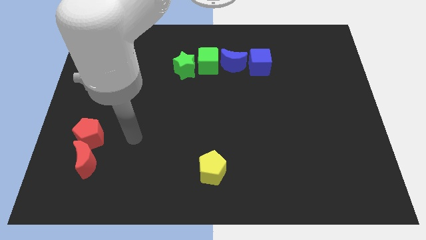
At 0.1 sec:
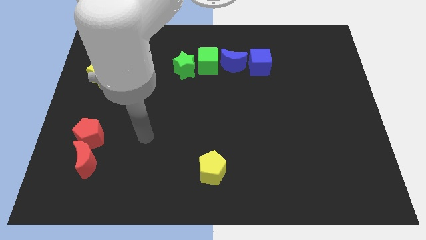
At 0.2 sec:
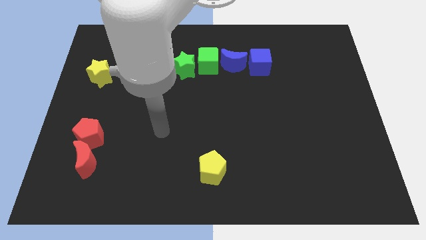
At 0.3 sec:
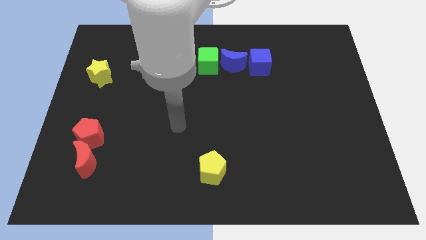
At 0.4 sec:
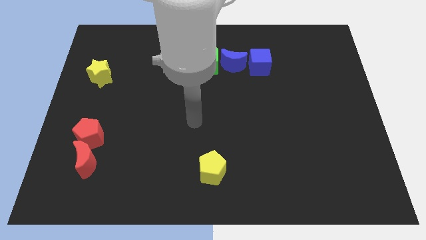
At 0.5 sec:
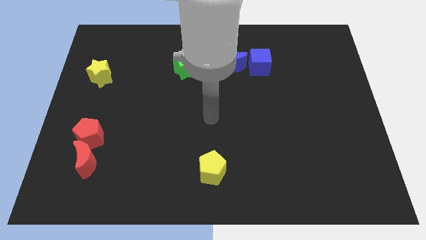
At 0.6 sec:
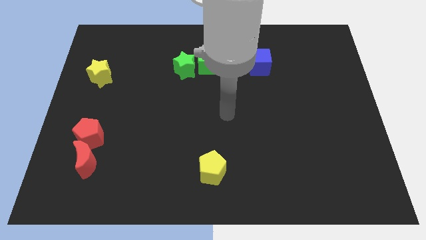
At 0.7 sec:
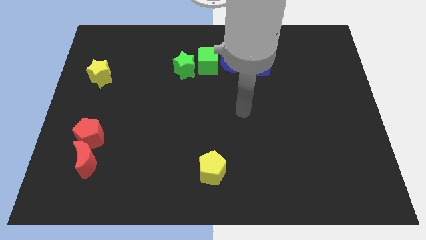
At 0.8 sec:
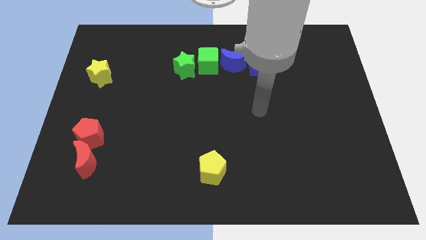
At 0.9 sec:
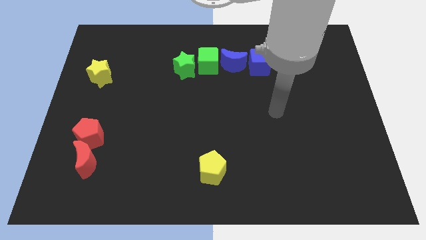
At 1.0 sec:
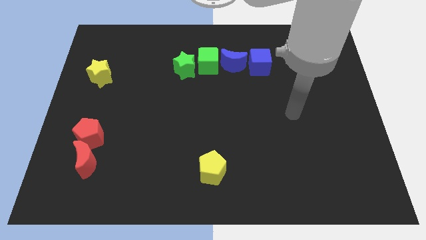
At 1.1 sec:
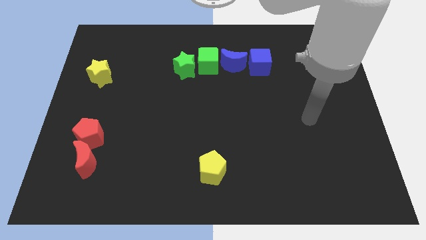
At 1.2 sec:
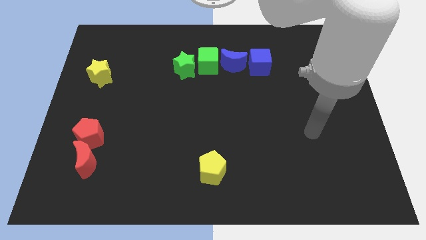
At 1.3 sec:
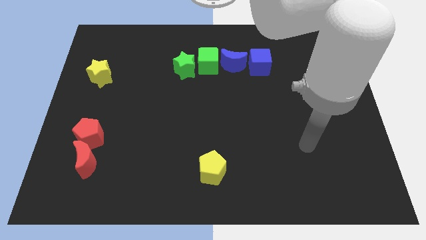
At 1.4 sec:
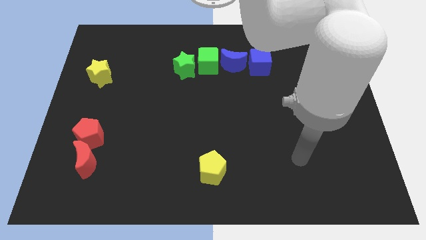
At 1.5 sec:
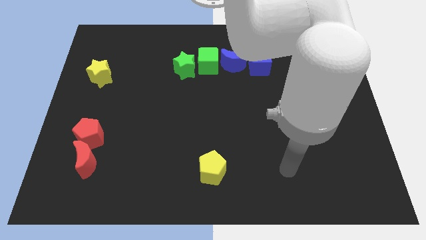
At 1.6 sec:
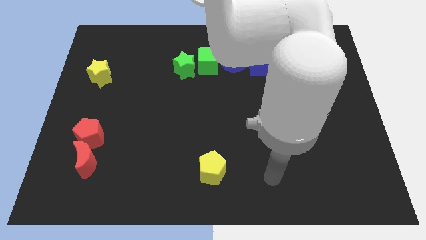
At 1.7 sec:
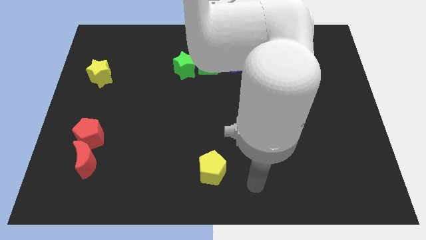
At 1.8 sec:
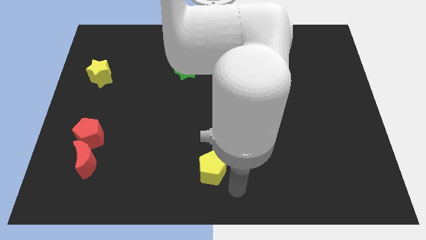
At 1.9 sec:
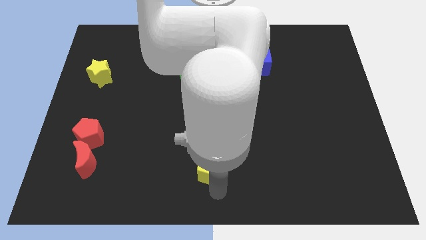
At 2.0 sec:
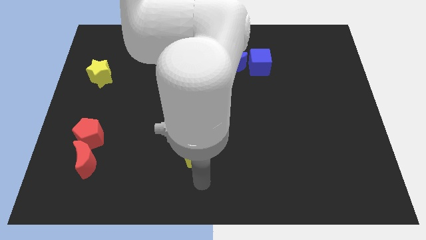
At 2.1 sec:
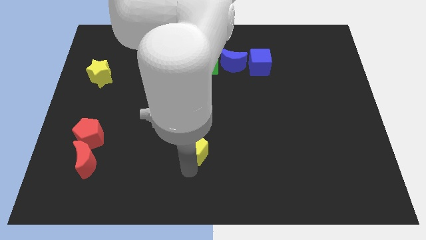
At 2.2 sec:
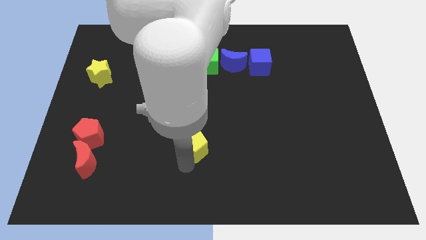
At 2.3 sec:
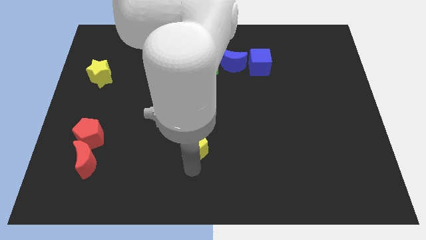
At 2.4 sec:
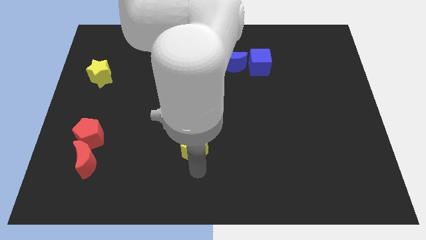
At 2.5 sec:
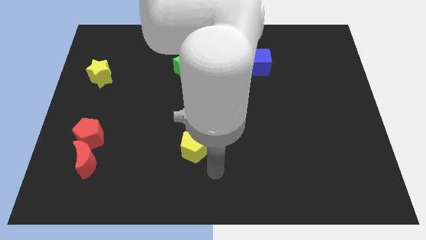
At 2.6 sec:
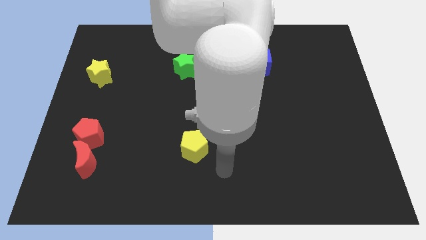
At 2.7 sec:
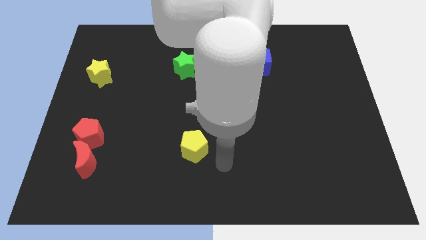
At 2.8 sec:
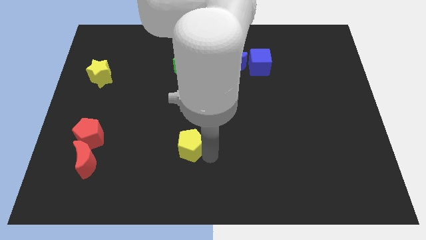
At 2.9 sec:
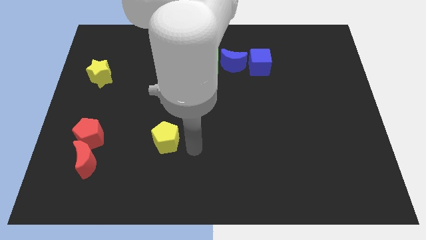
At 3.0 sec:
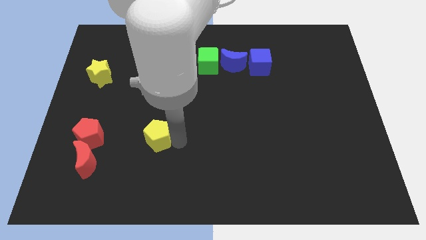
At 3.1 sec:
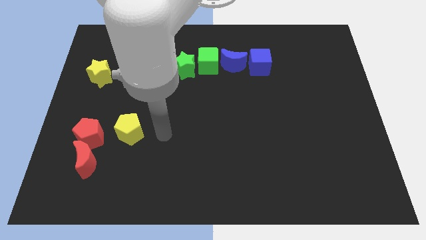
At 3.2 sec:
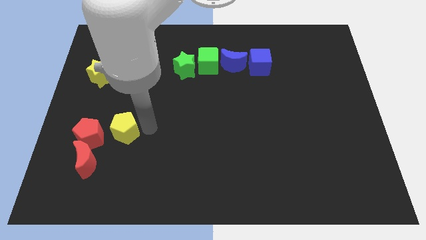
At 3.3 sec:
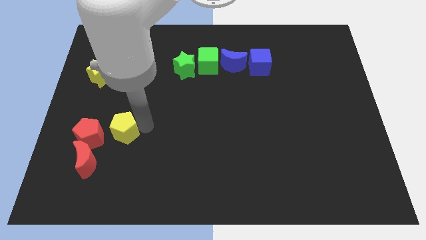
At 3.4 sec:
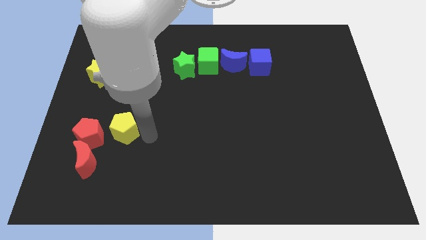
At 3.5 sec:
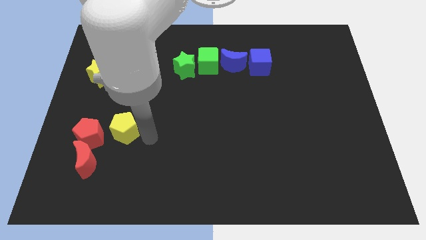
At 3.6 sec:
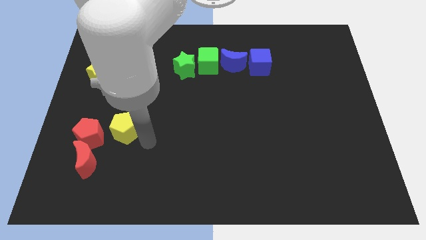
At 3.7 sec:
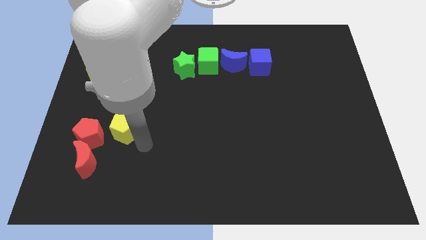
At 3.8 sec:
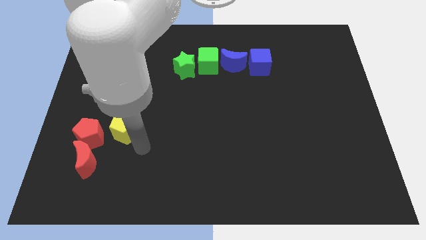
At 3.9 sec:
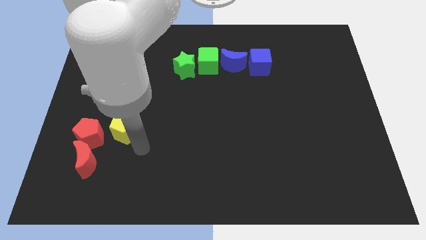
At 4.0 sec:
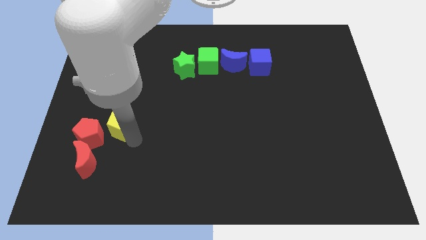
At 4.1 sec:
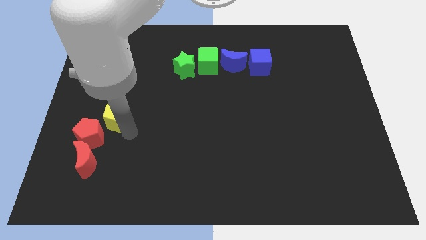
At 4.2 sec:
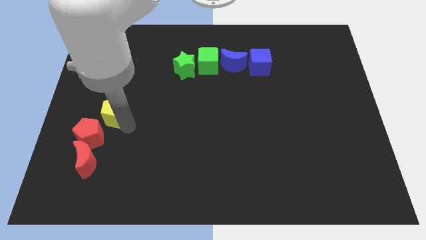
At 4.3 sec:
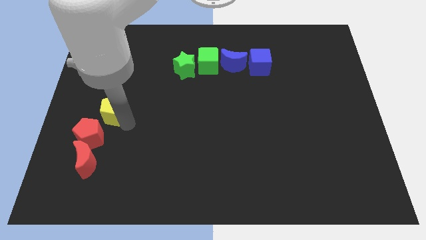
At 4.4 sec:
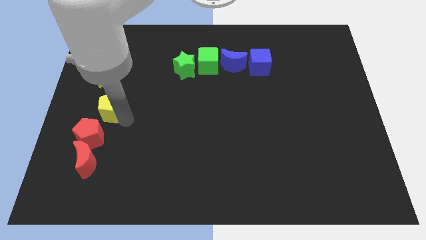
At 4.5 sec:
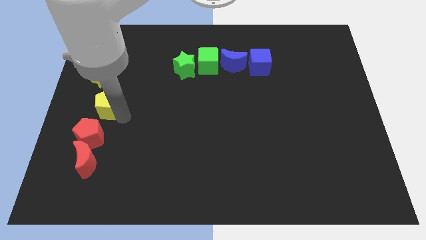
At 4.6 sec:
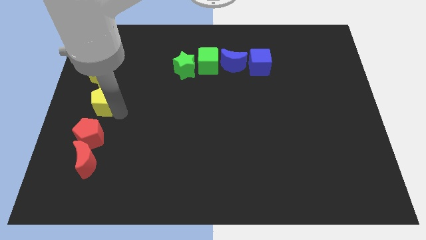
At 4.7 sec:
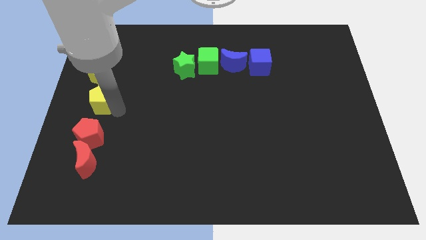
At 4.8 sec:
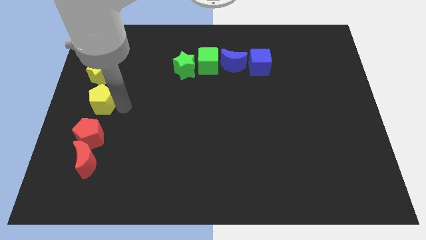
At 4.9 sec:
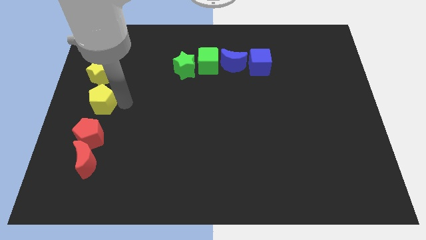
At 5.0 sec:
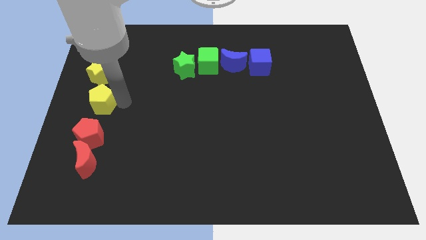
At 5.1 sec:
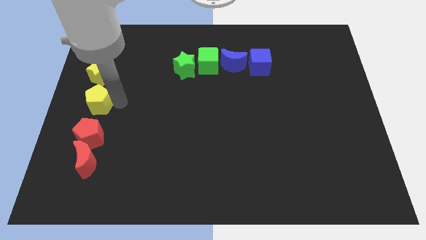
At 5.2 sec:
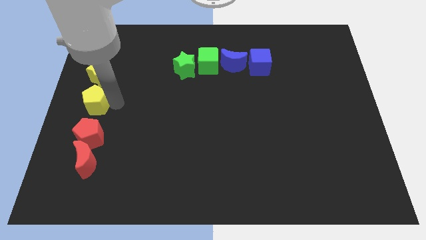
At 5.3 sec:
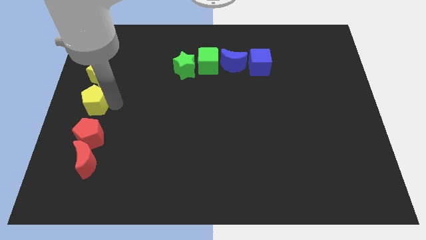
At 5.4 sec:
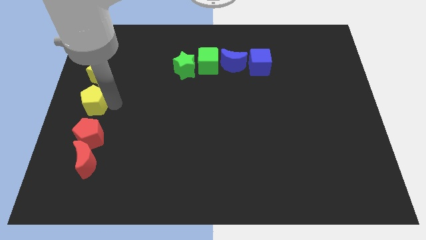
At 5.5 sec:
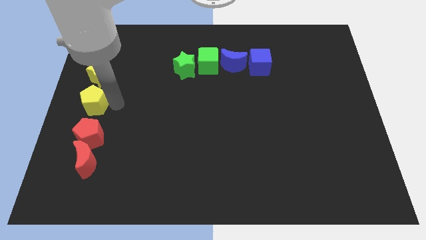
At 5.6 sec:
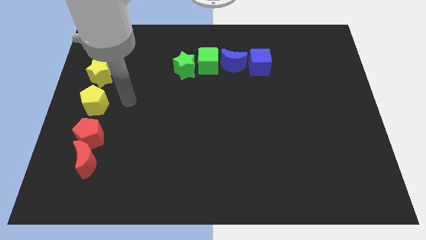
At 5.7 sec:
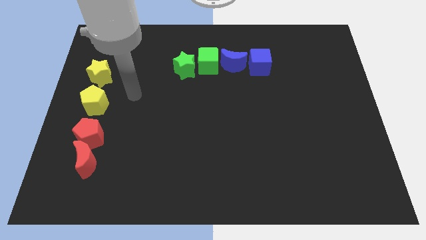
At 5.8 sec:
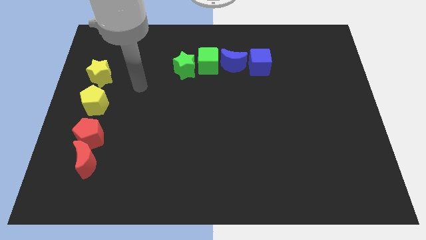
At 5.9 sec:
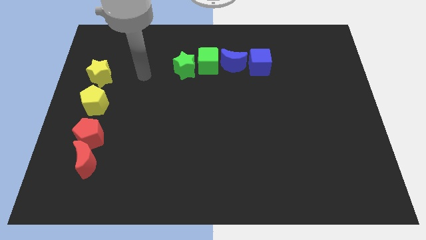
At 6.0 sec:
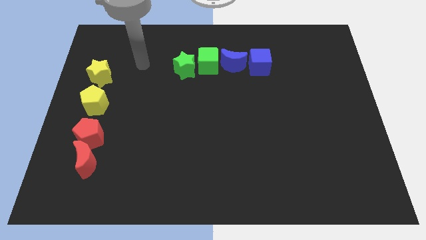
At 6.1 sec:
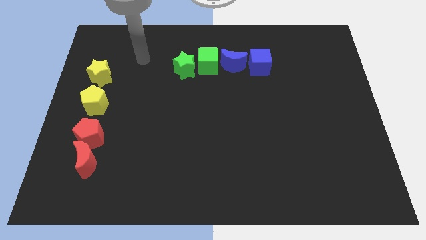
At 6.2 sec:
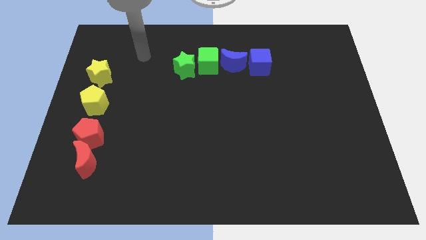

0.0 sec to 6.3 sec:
place the yellow pentagon in between the red pentagon and yellow star

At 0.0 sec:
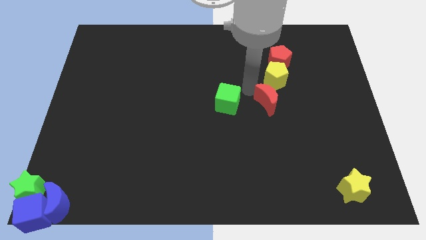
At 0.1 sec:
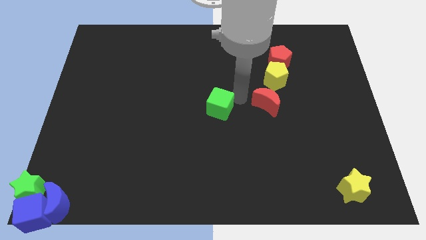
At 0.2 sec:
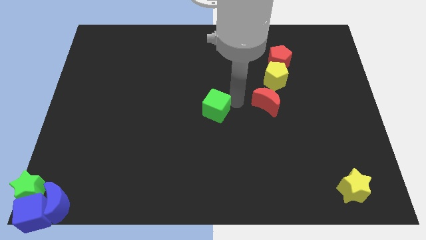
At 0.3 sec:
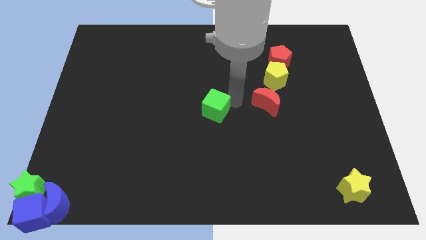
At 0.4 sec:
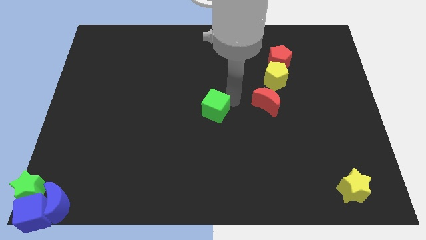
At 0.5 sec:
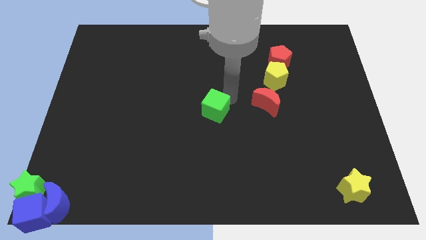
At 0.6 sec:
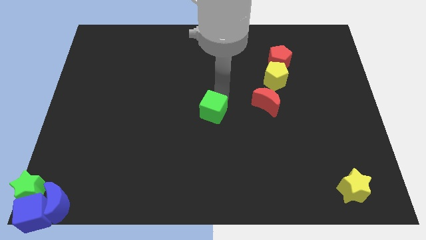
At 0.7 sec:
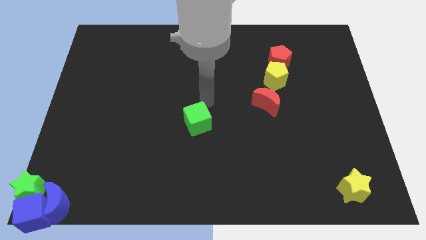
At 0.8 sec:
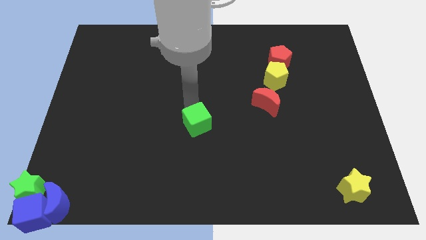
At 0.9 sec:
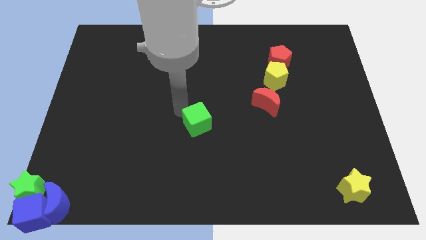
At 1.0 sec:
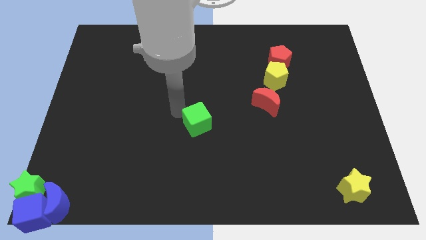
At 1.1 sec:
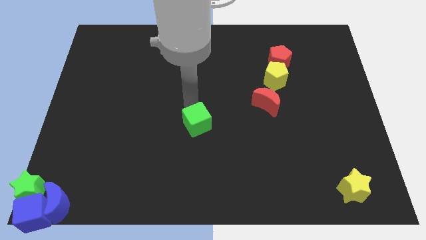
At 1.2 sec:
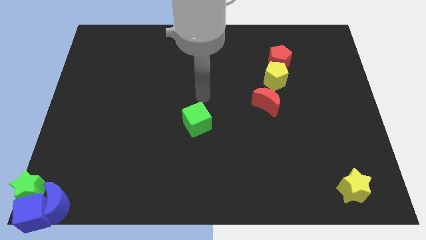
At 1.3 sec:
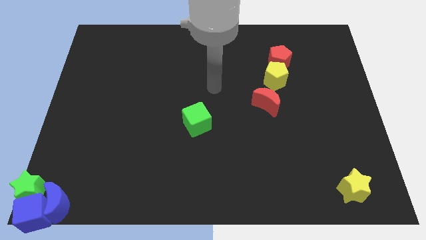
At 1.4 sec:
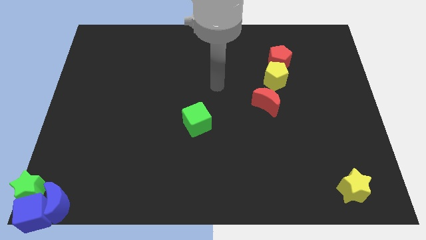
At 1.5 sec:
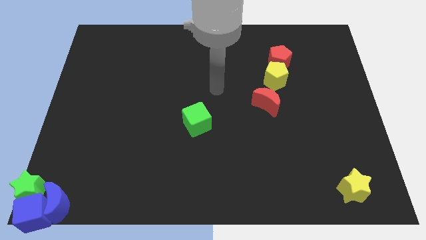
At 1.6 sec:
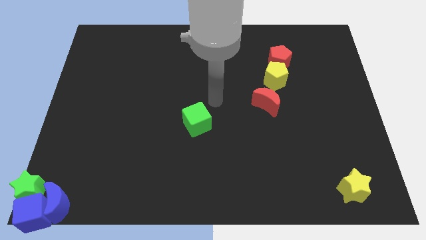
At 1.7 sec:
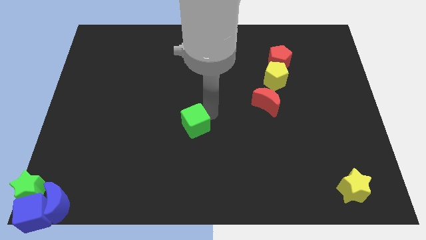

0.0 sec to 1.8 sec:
place the green cube at the center of the board

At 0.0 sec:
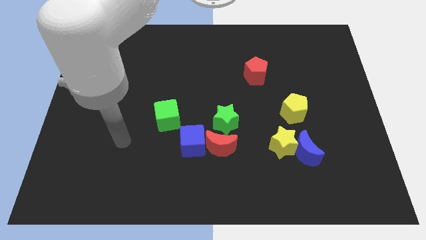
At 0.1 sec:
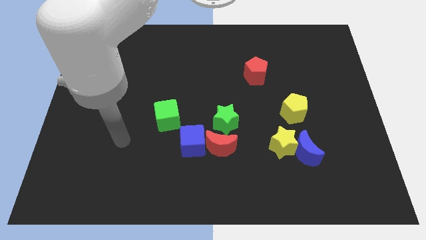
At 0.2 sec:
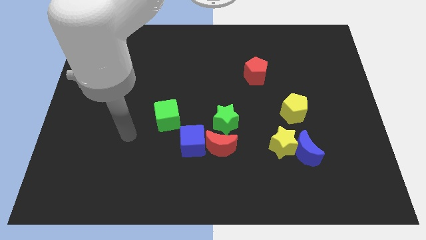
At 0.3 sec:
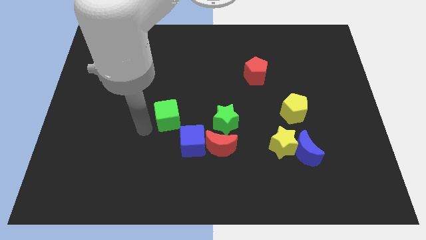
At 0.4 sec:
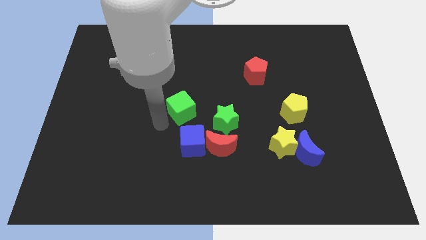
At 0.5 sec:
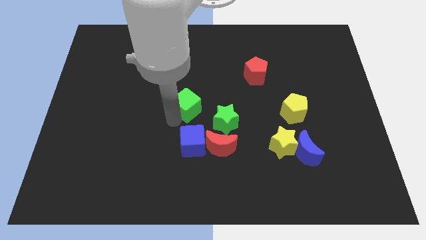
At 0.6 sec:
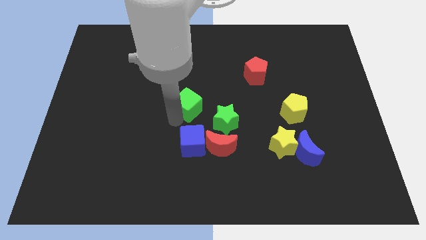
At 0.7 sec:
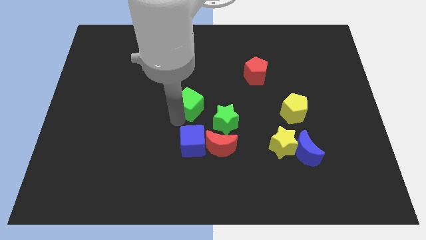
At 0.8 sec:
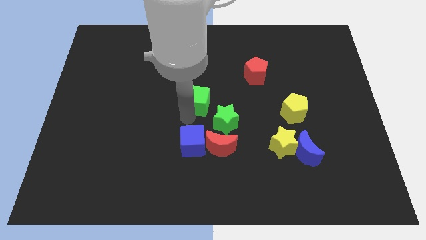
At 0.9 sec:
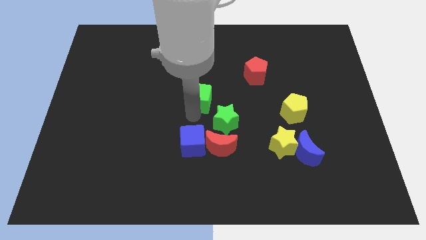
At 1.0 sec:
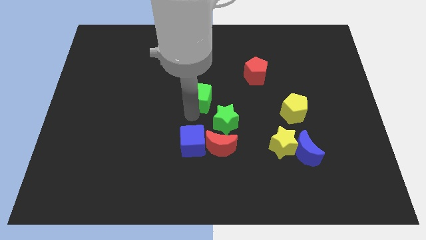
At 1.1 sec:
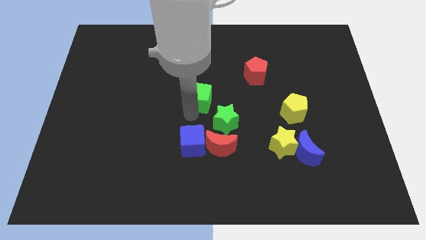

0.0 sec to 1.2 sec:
push green cube upwards
